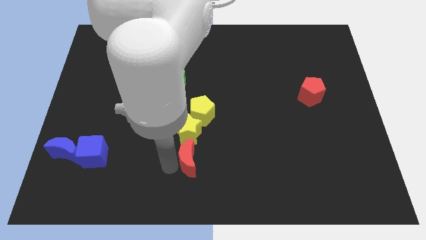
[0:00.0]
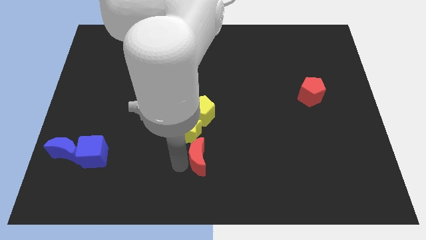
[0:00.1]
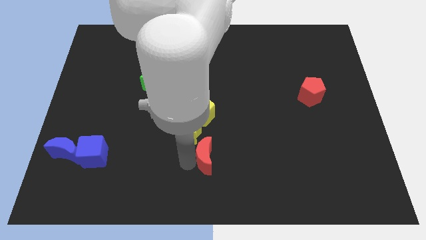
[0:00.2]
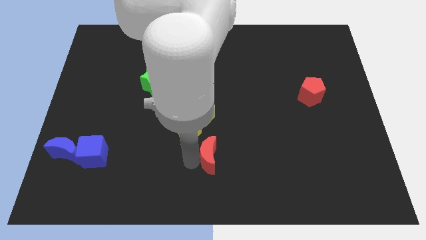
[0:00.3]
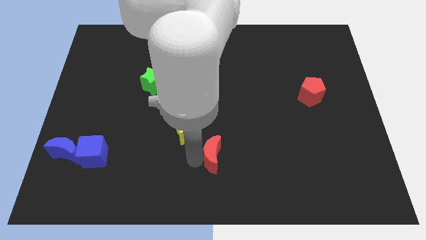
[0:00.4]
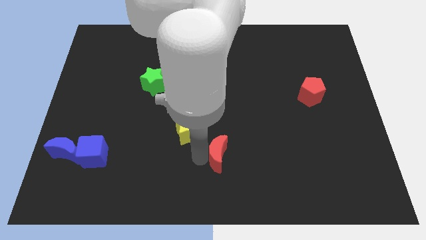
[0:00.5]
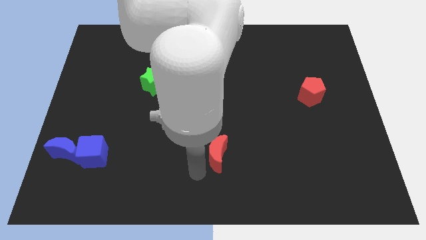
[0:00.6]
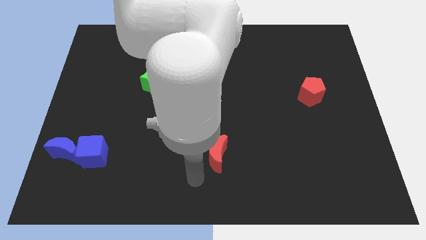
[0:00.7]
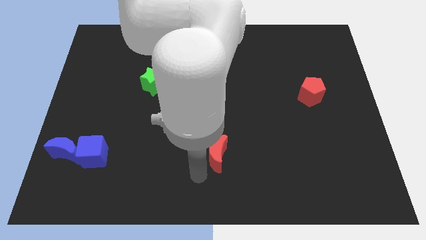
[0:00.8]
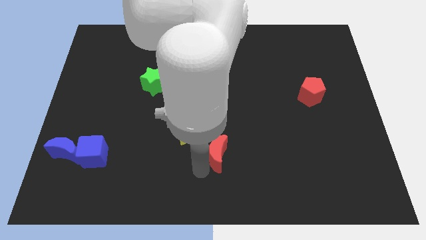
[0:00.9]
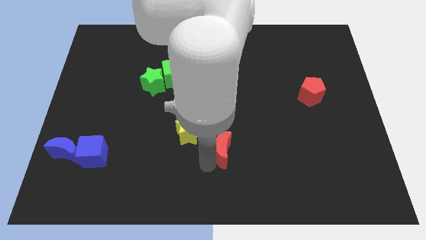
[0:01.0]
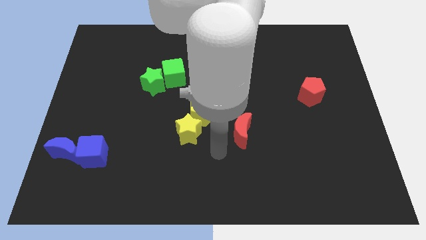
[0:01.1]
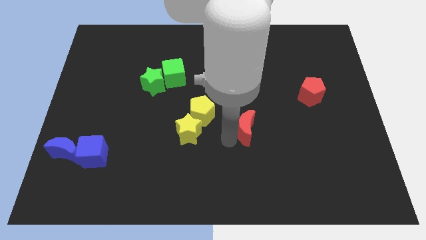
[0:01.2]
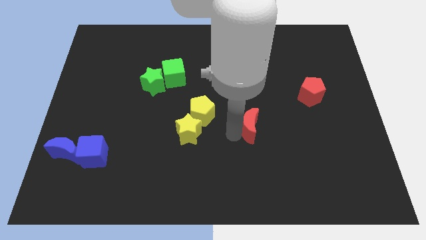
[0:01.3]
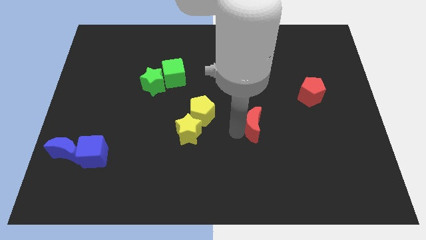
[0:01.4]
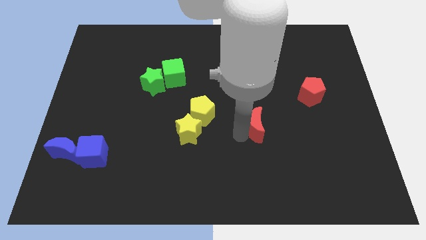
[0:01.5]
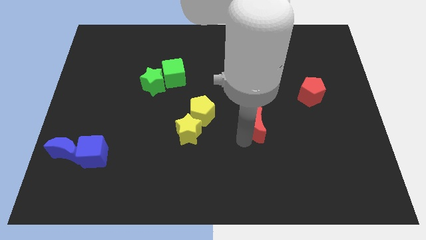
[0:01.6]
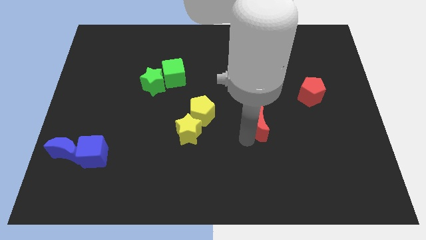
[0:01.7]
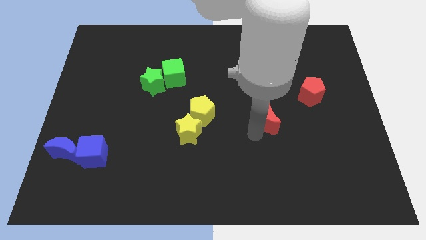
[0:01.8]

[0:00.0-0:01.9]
slightly move red moon towards the top

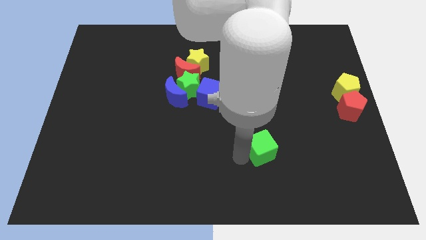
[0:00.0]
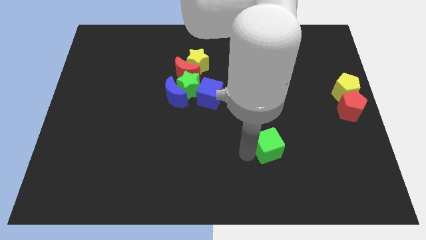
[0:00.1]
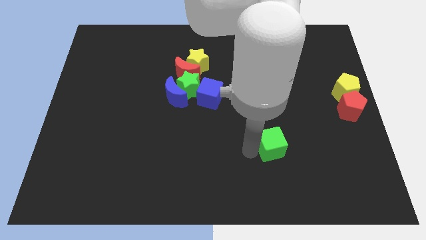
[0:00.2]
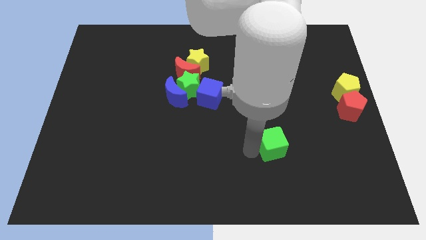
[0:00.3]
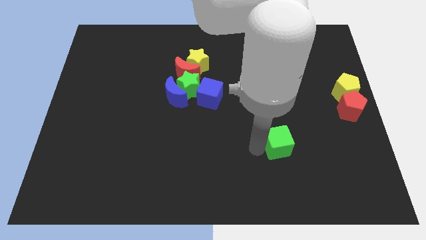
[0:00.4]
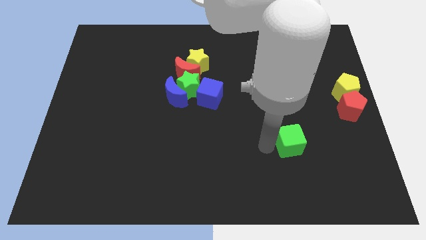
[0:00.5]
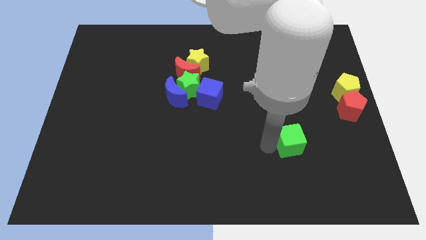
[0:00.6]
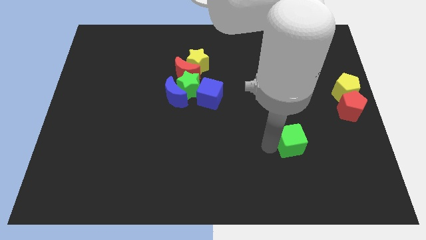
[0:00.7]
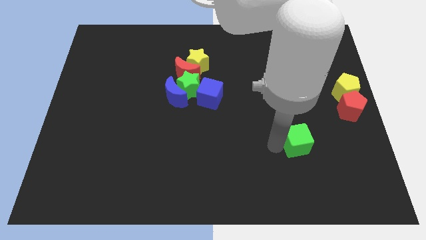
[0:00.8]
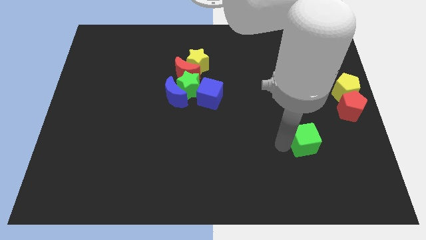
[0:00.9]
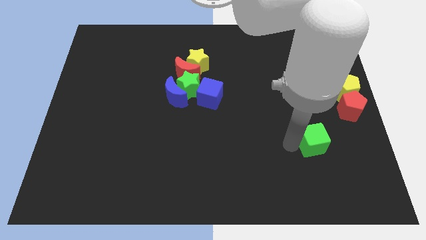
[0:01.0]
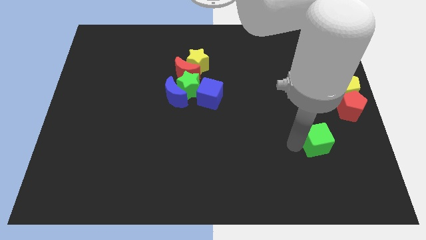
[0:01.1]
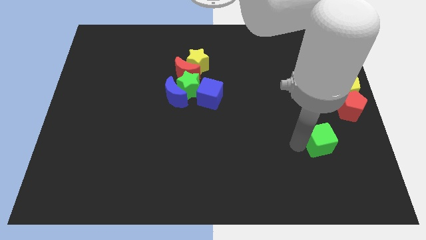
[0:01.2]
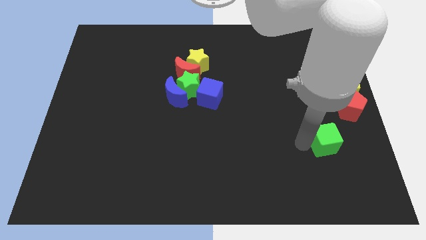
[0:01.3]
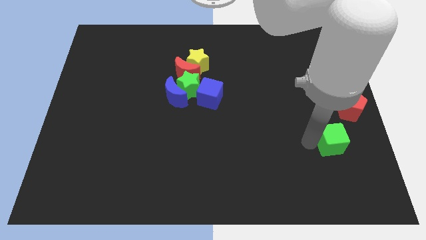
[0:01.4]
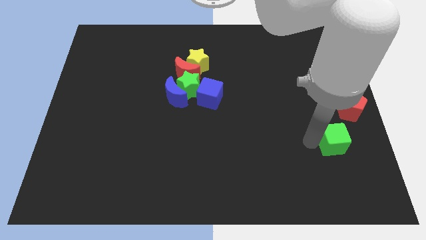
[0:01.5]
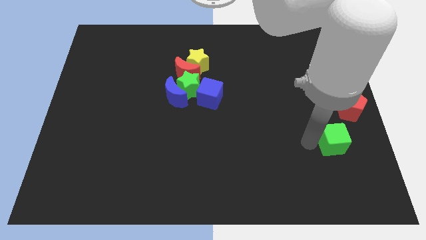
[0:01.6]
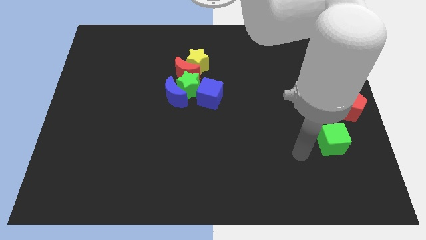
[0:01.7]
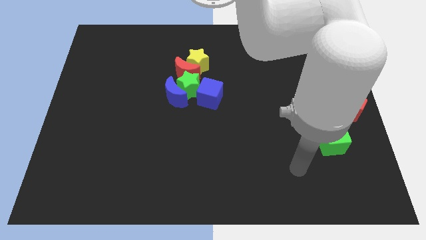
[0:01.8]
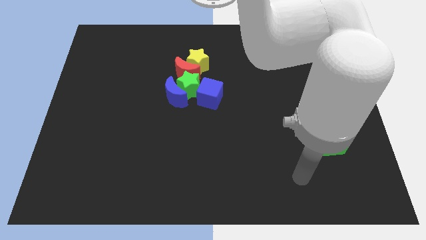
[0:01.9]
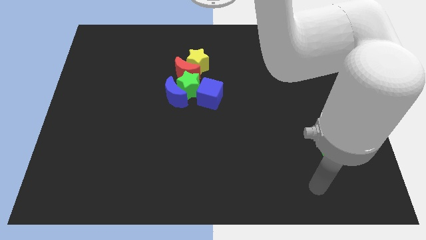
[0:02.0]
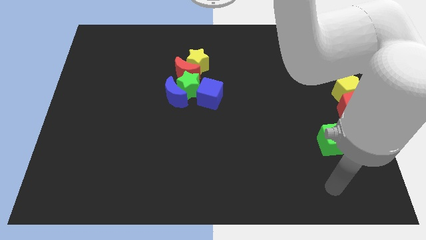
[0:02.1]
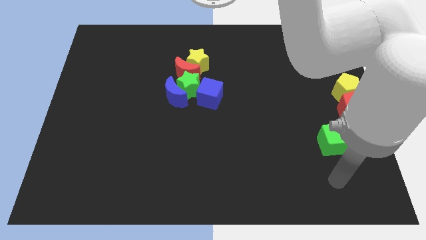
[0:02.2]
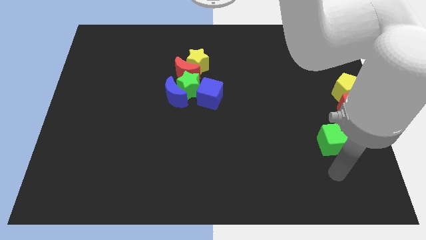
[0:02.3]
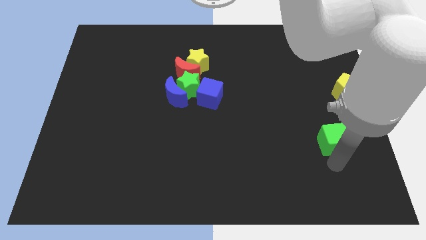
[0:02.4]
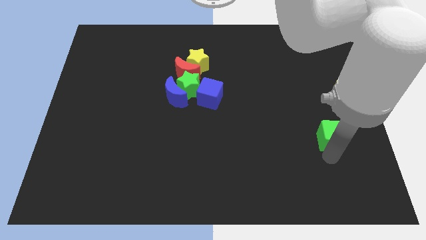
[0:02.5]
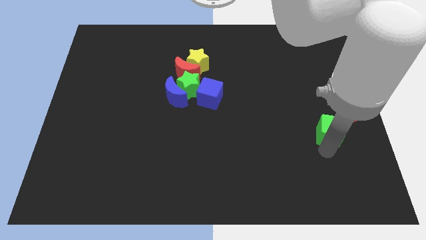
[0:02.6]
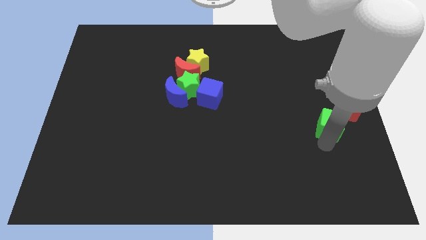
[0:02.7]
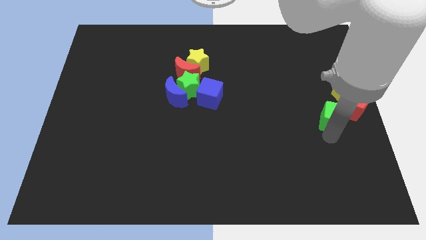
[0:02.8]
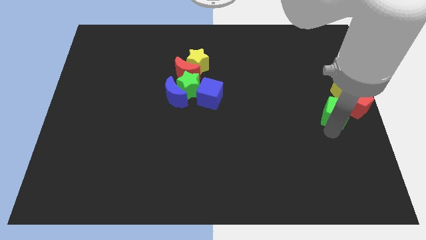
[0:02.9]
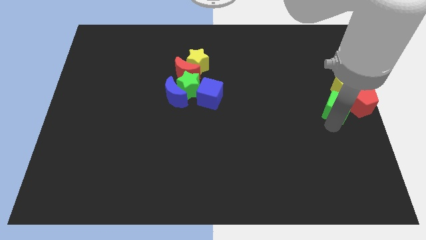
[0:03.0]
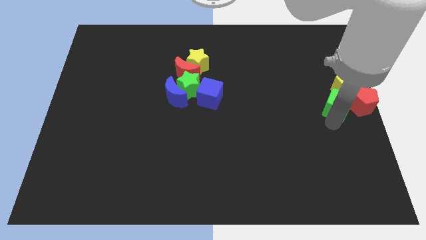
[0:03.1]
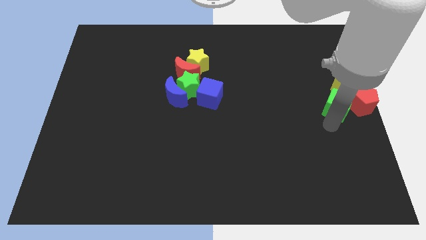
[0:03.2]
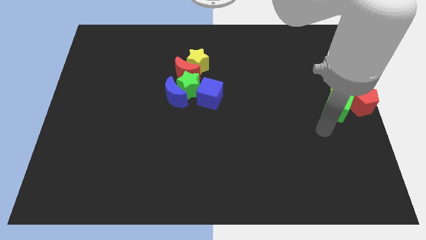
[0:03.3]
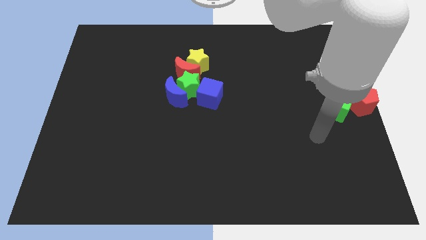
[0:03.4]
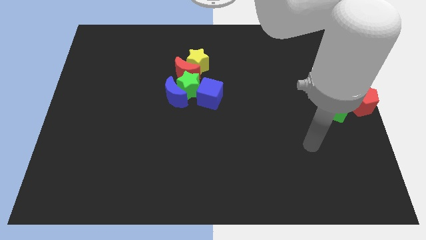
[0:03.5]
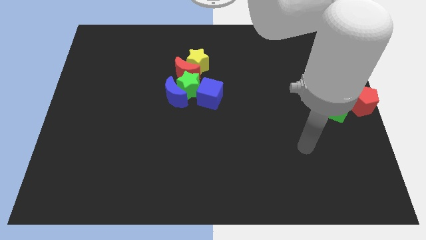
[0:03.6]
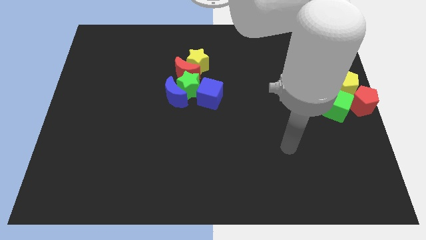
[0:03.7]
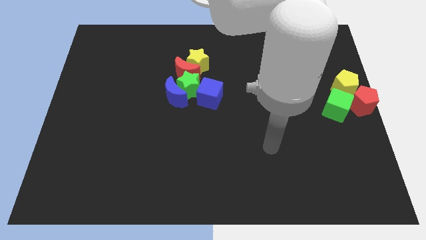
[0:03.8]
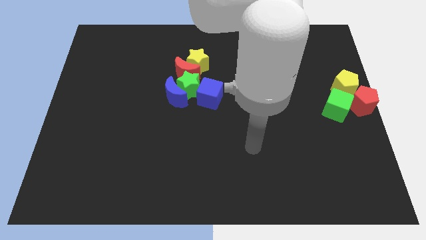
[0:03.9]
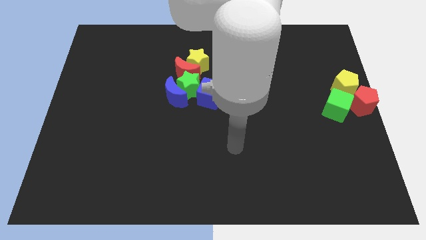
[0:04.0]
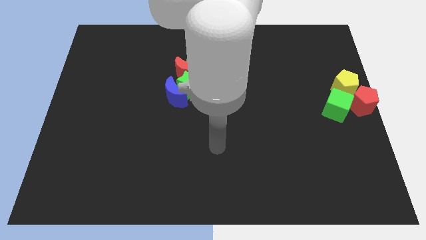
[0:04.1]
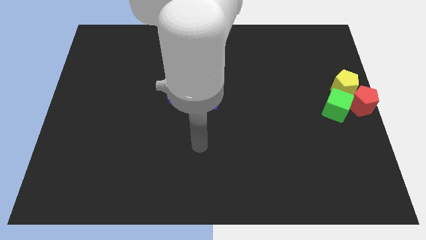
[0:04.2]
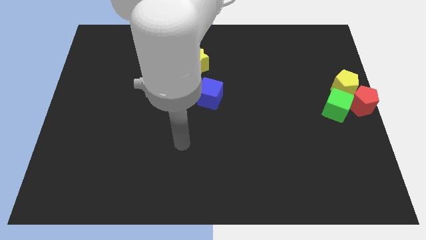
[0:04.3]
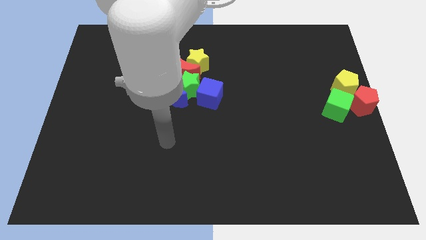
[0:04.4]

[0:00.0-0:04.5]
move the green cube to the right center of the board

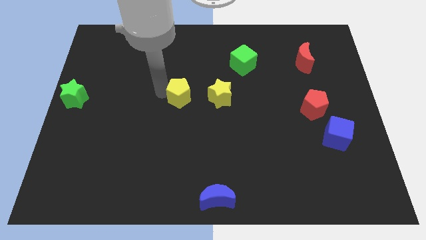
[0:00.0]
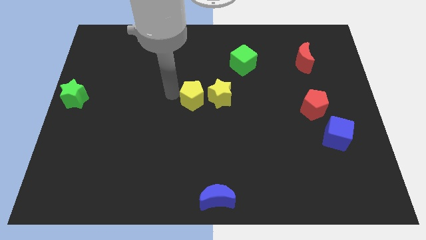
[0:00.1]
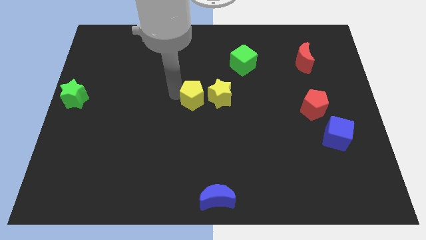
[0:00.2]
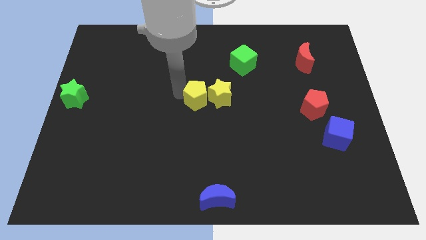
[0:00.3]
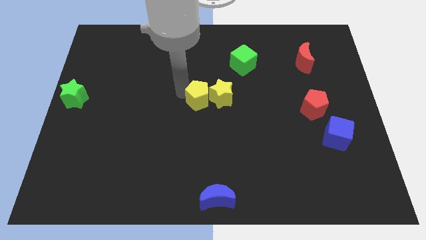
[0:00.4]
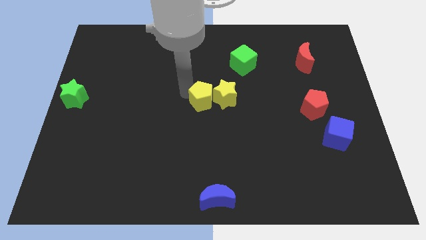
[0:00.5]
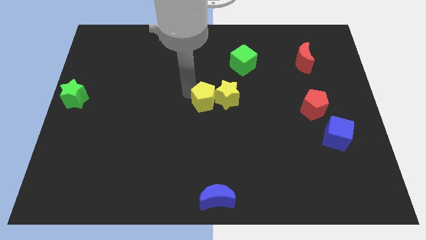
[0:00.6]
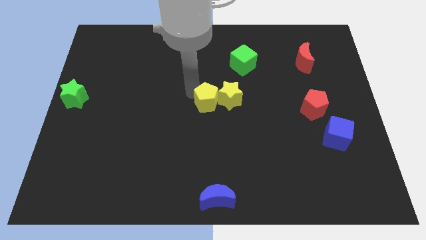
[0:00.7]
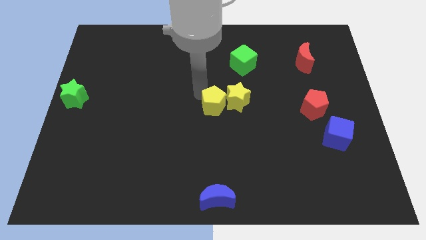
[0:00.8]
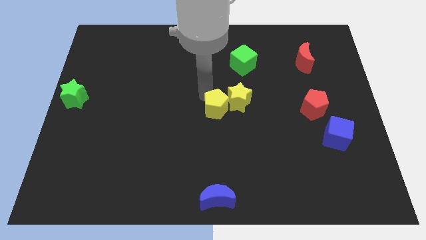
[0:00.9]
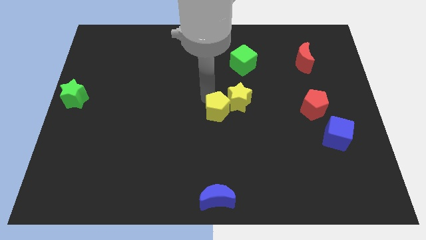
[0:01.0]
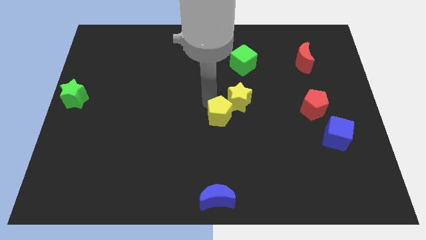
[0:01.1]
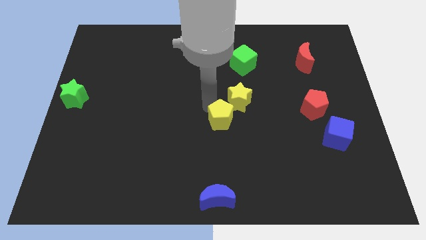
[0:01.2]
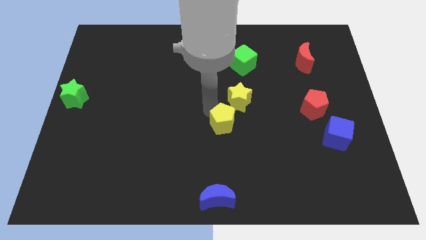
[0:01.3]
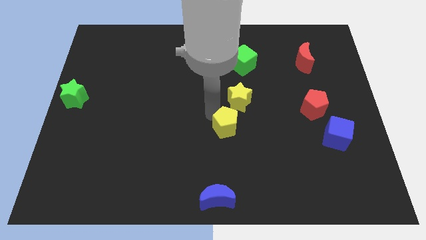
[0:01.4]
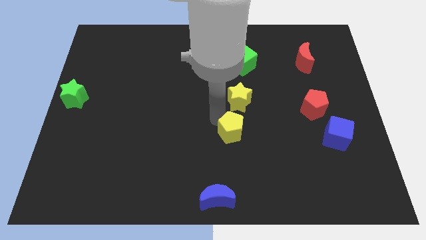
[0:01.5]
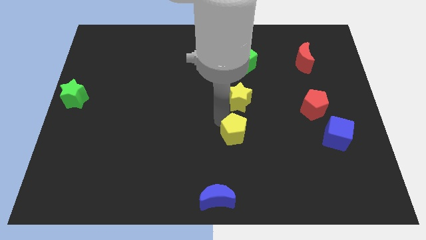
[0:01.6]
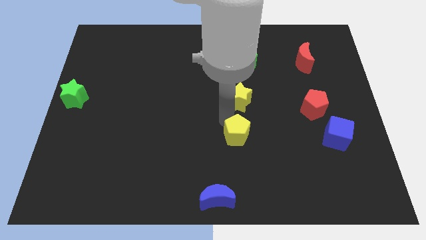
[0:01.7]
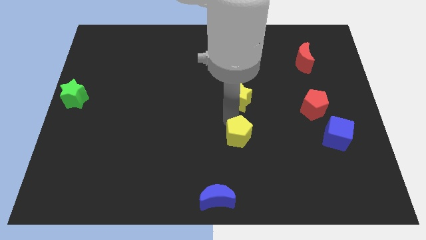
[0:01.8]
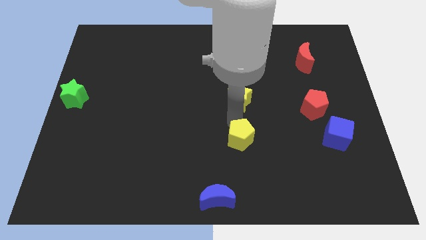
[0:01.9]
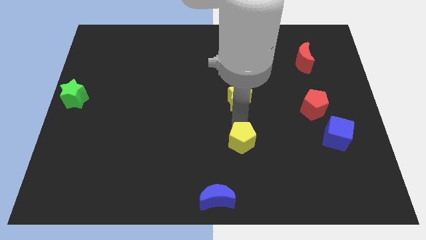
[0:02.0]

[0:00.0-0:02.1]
place the yellow pentagon in between the yellow star and blue moon

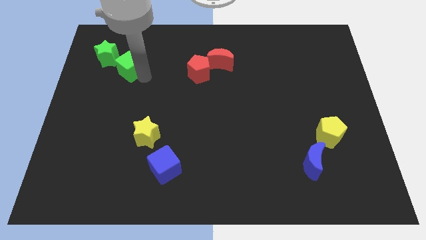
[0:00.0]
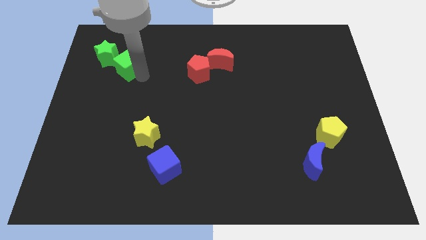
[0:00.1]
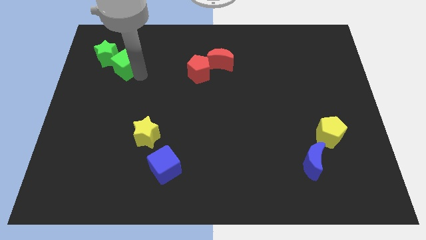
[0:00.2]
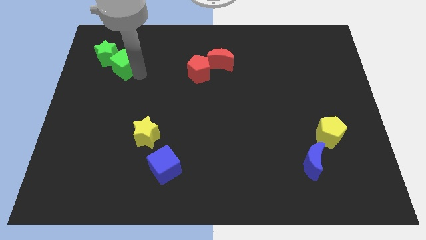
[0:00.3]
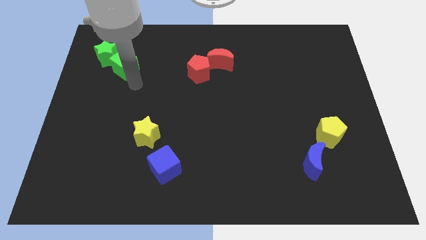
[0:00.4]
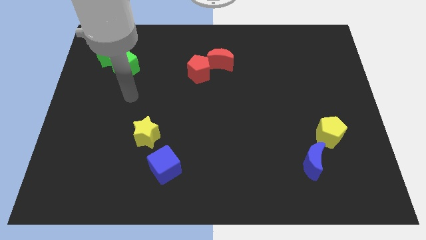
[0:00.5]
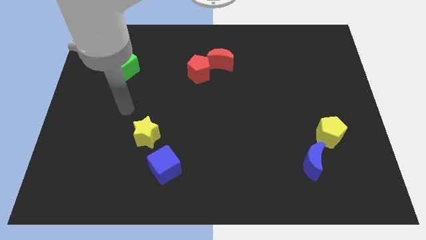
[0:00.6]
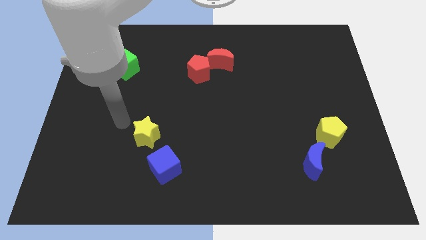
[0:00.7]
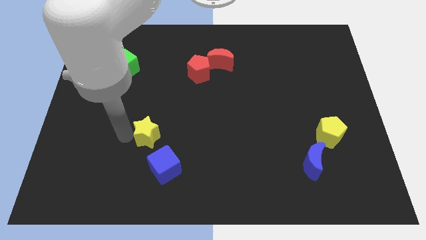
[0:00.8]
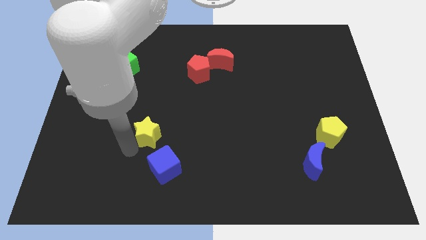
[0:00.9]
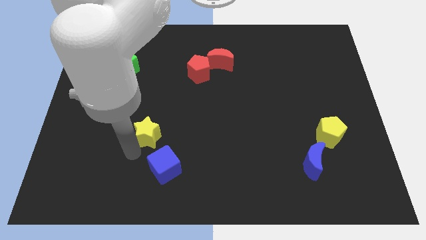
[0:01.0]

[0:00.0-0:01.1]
move the arm to the yellow star
